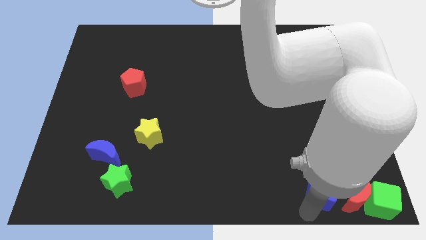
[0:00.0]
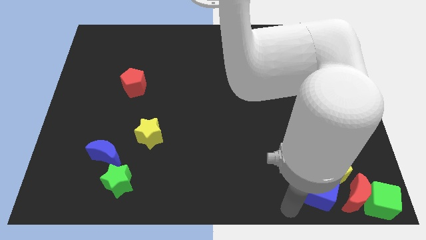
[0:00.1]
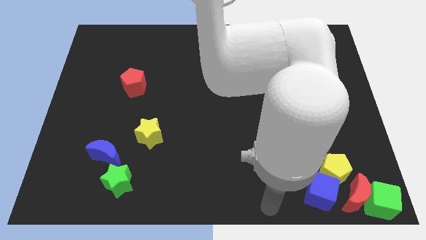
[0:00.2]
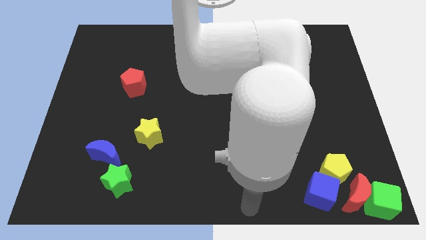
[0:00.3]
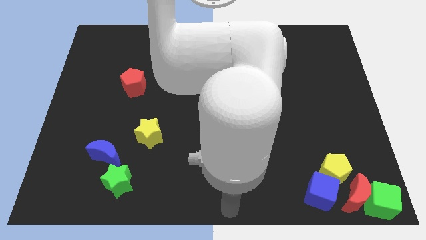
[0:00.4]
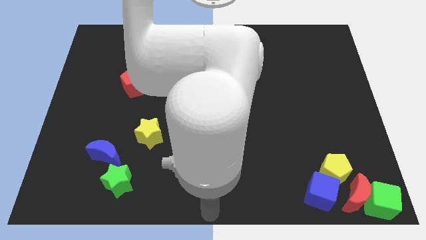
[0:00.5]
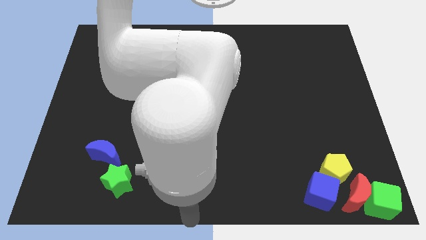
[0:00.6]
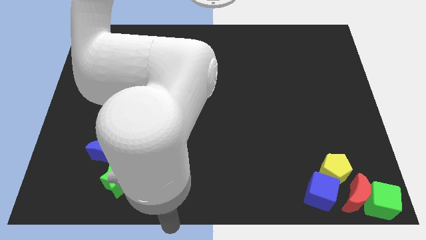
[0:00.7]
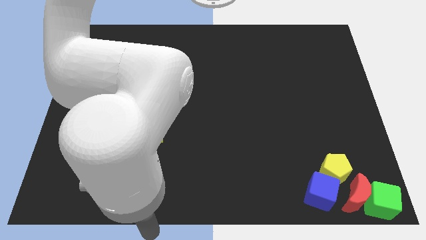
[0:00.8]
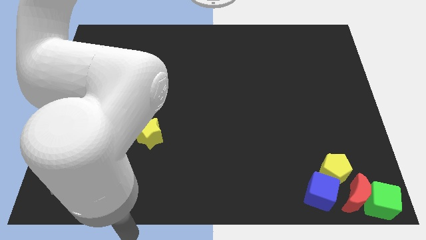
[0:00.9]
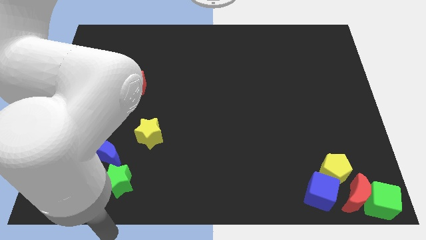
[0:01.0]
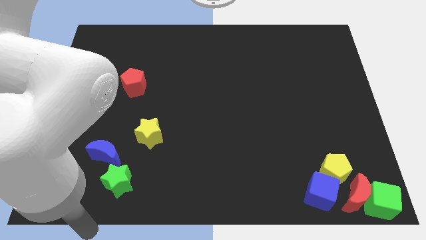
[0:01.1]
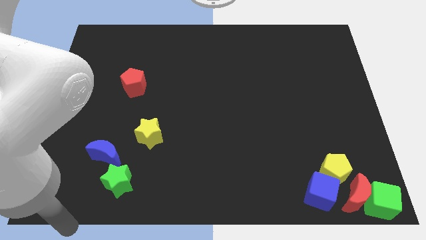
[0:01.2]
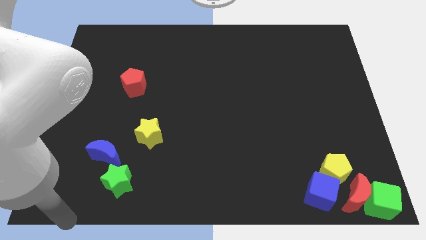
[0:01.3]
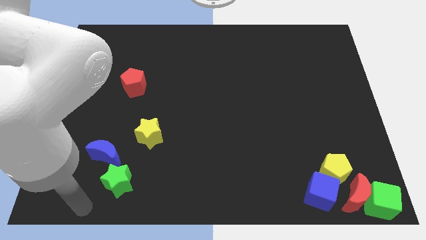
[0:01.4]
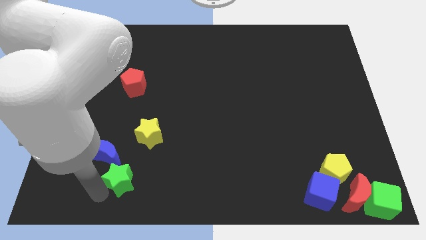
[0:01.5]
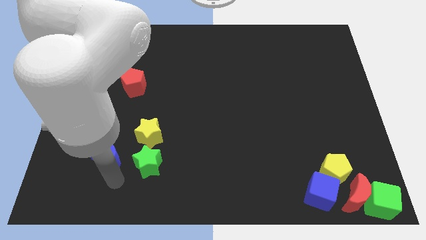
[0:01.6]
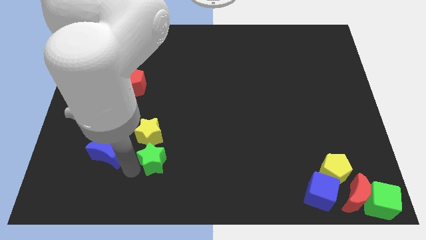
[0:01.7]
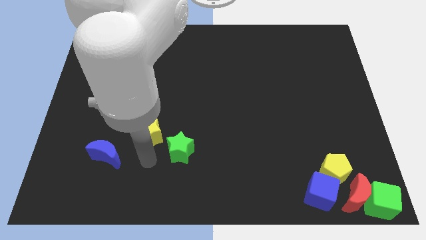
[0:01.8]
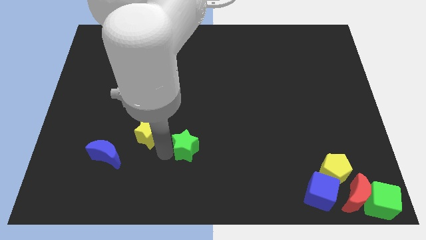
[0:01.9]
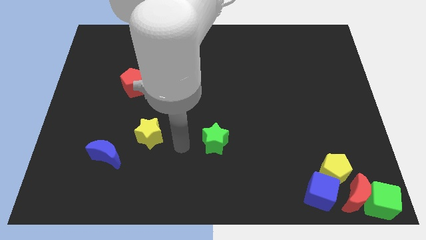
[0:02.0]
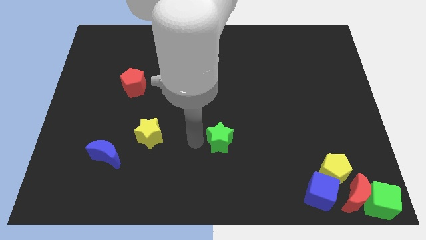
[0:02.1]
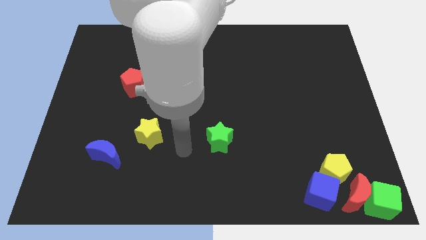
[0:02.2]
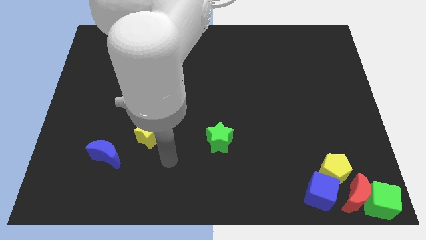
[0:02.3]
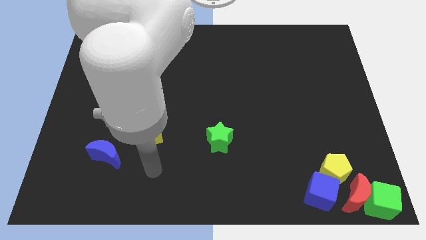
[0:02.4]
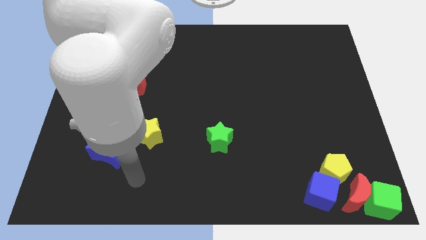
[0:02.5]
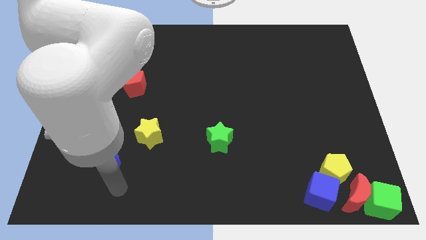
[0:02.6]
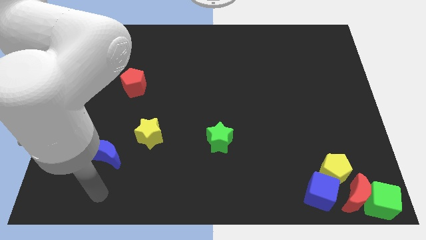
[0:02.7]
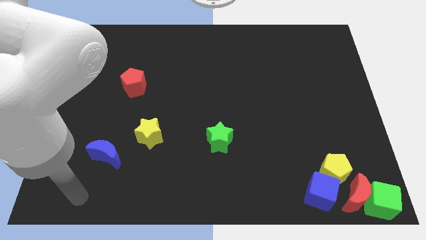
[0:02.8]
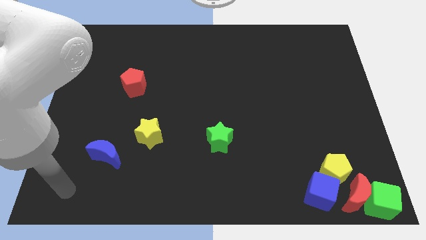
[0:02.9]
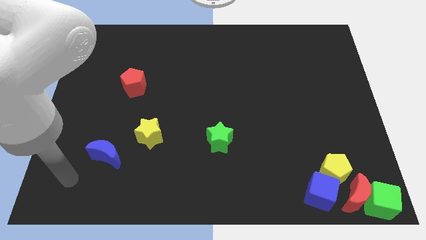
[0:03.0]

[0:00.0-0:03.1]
push the green star adjacent to the yellow star

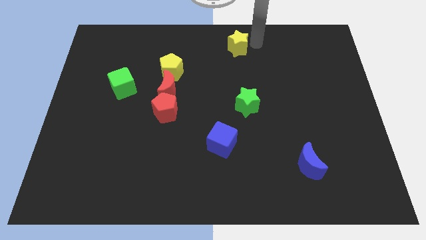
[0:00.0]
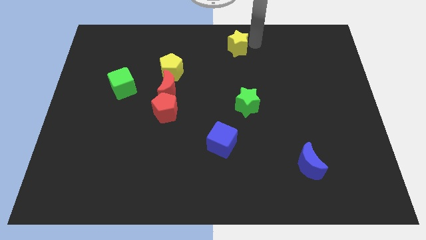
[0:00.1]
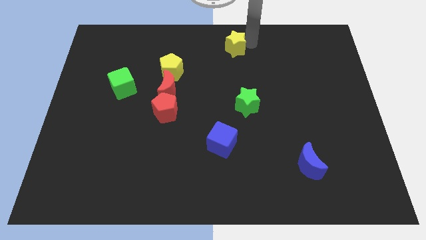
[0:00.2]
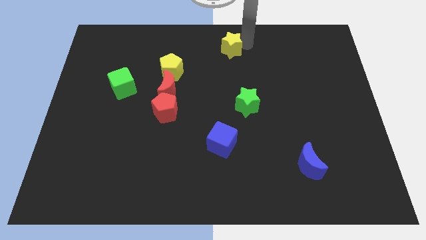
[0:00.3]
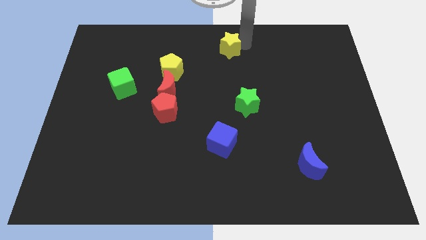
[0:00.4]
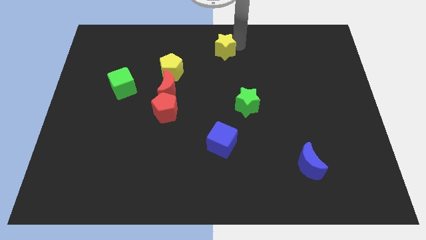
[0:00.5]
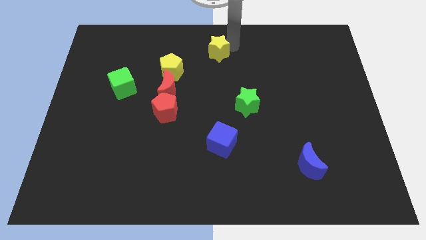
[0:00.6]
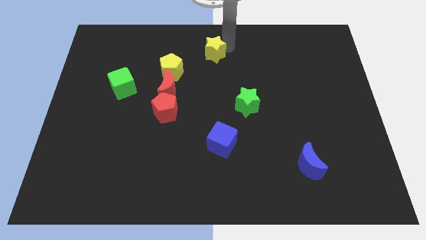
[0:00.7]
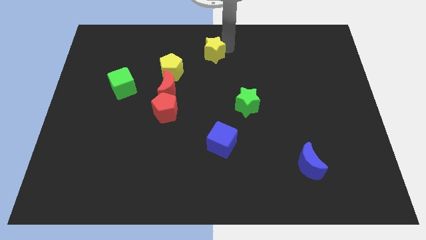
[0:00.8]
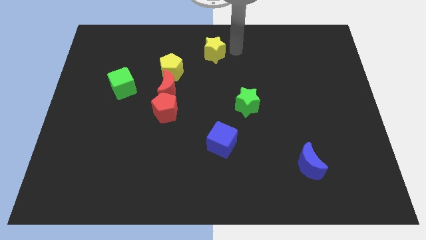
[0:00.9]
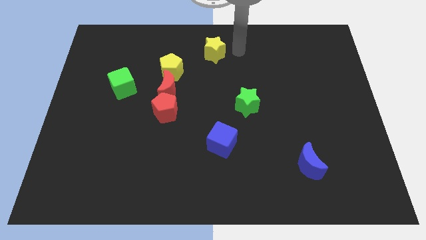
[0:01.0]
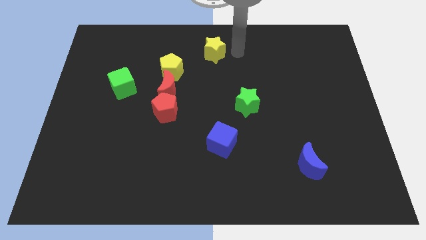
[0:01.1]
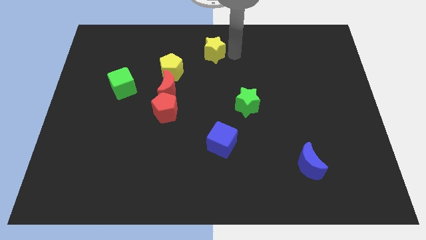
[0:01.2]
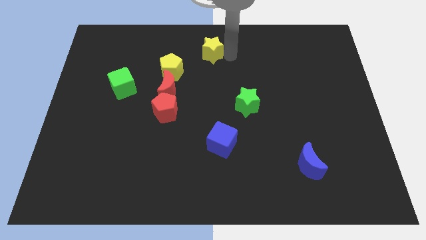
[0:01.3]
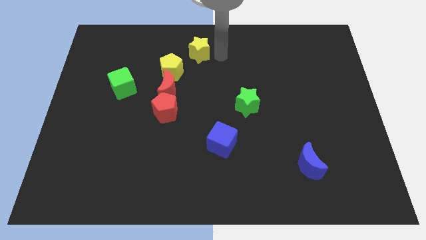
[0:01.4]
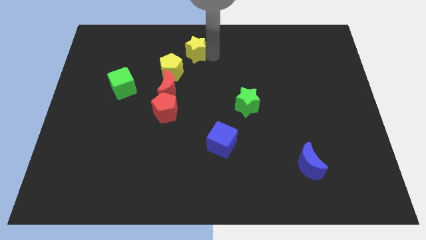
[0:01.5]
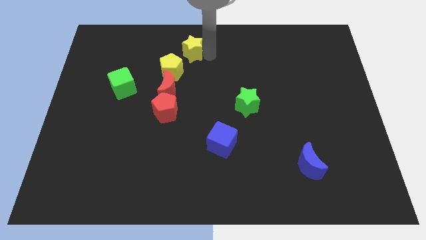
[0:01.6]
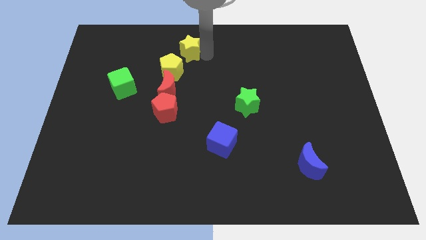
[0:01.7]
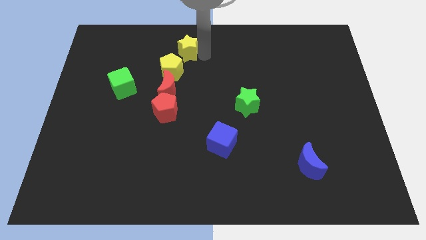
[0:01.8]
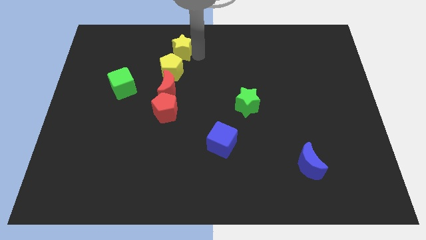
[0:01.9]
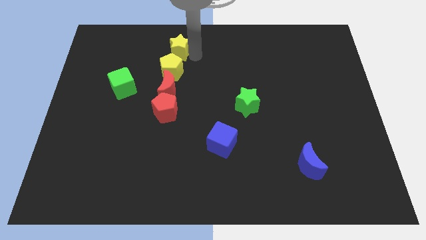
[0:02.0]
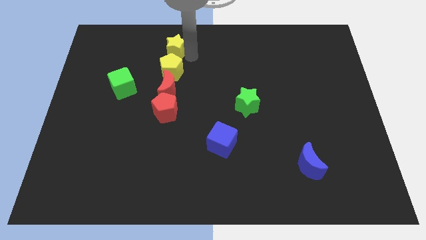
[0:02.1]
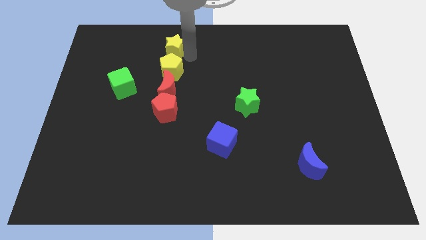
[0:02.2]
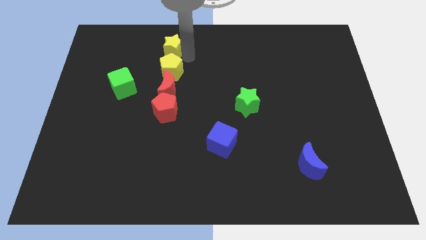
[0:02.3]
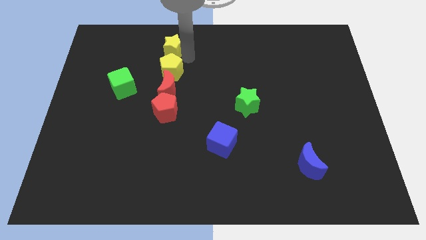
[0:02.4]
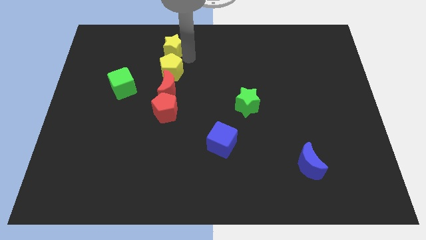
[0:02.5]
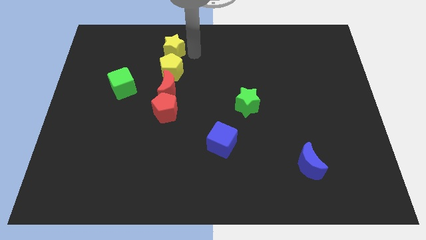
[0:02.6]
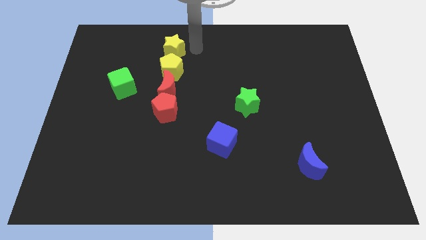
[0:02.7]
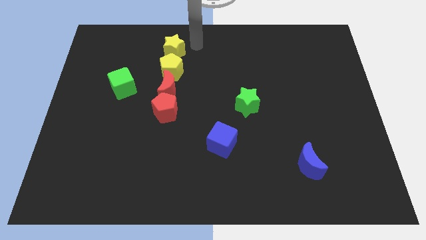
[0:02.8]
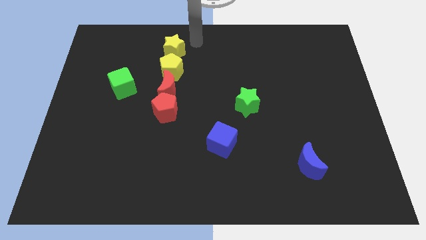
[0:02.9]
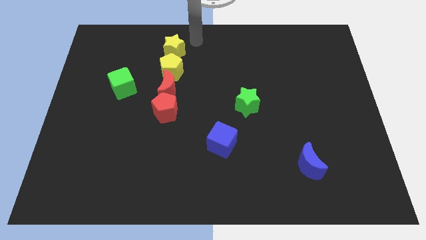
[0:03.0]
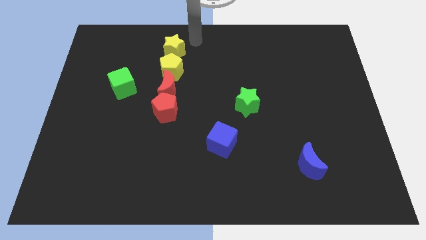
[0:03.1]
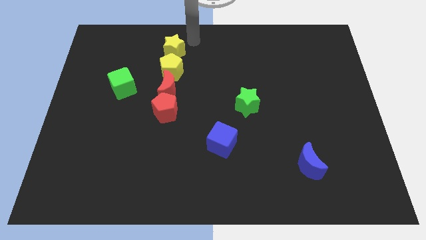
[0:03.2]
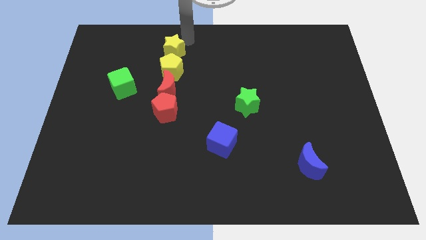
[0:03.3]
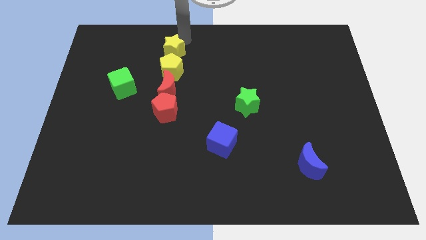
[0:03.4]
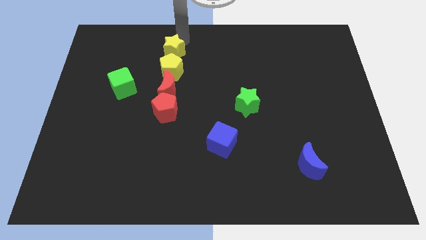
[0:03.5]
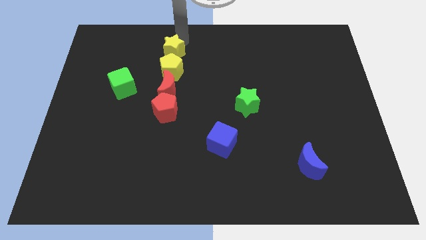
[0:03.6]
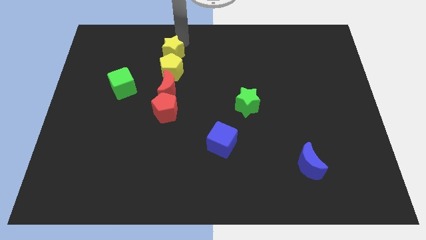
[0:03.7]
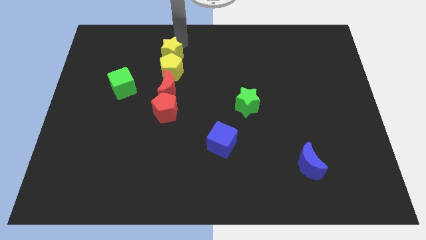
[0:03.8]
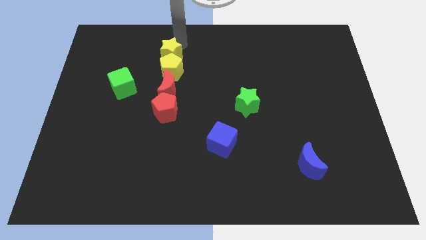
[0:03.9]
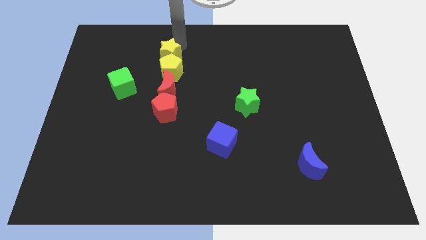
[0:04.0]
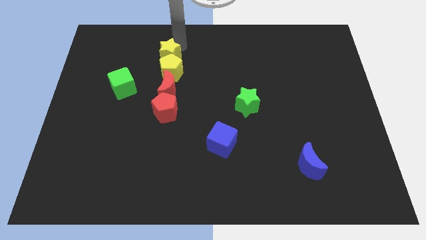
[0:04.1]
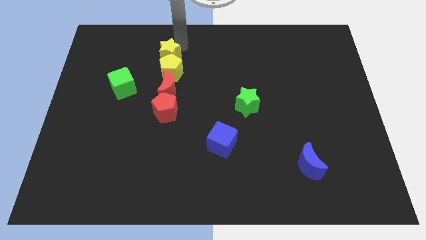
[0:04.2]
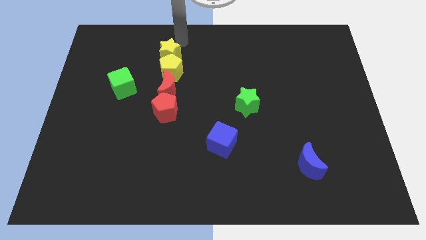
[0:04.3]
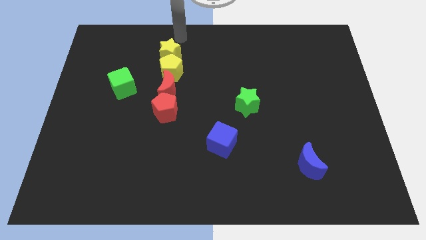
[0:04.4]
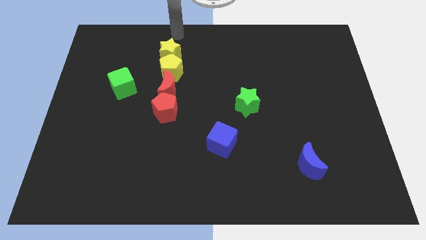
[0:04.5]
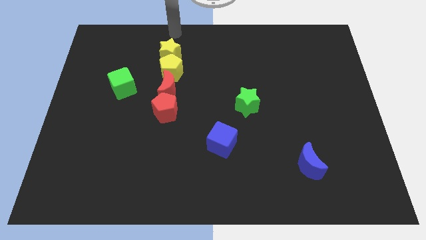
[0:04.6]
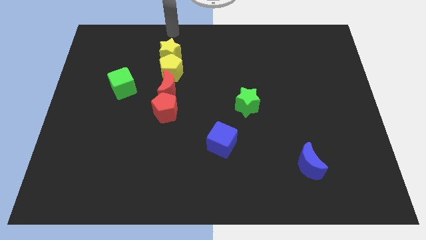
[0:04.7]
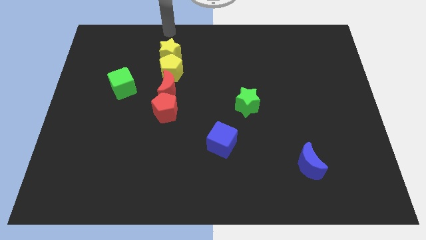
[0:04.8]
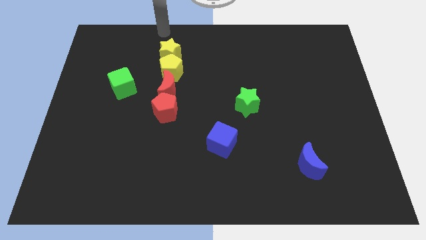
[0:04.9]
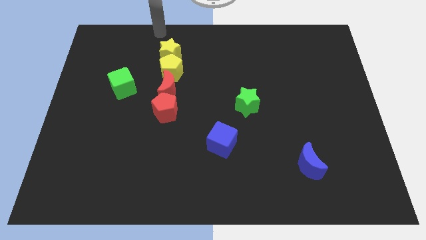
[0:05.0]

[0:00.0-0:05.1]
move the yellow star to the top side of the yellow pentagon

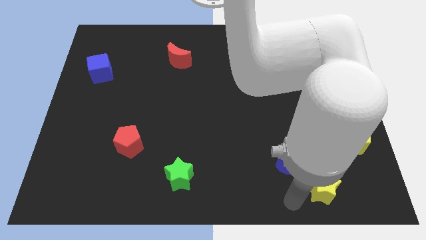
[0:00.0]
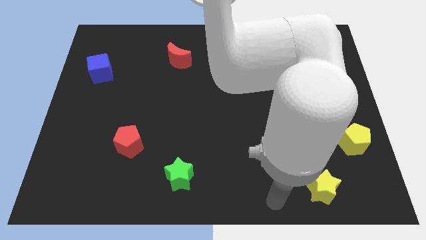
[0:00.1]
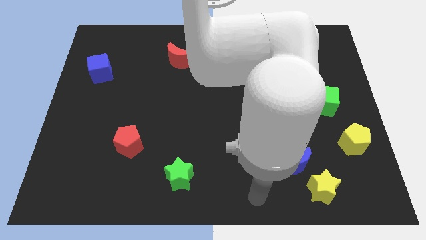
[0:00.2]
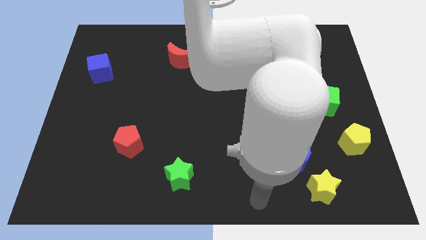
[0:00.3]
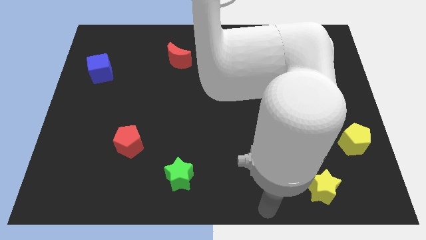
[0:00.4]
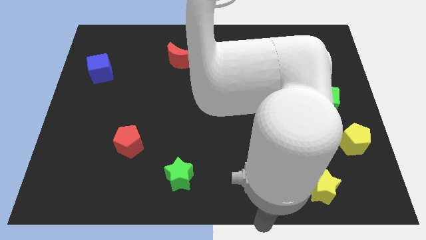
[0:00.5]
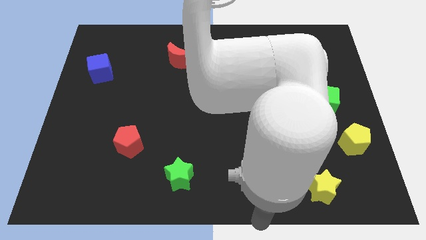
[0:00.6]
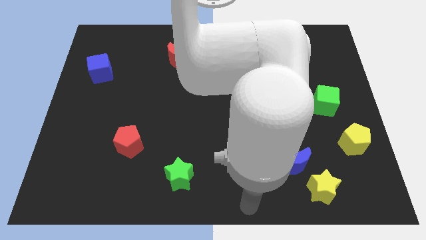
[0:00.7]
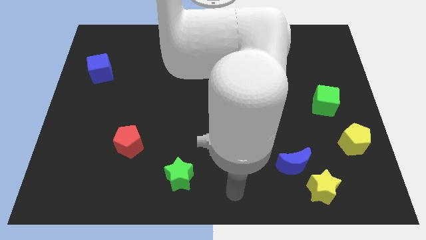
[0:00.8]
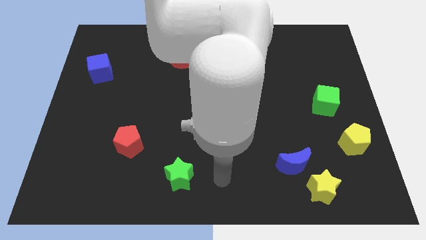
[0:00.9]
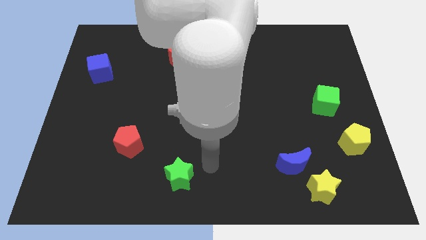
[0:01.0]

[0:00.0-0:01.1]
point your arm in between the blue moon and green star
